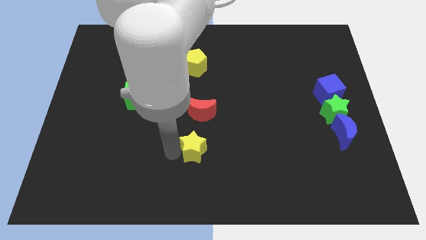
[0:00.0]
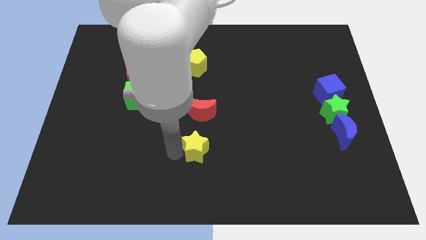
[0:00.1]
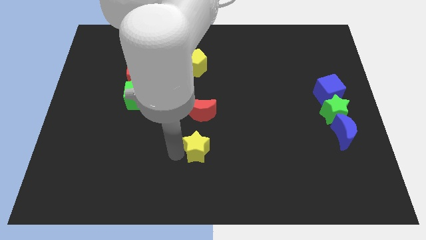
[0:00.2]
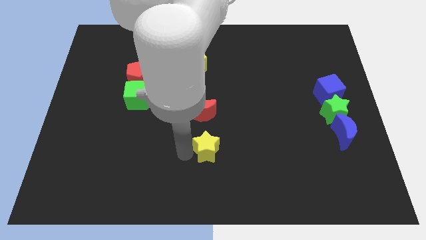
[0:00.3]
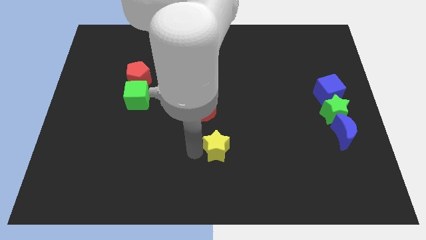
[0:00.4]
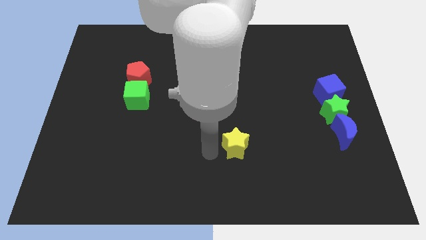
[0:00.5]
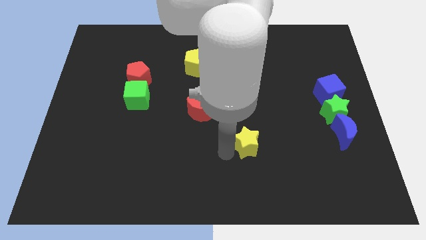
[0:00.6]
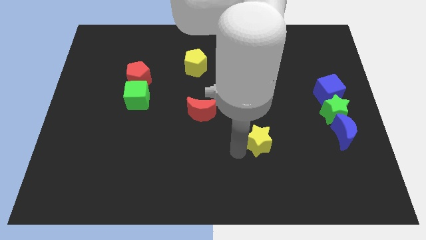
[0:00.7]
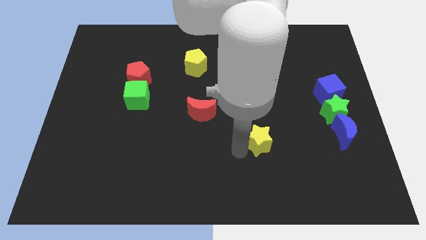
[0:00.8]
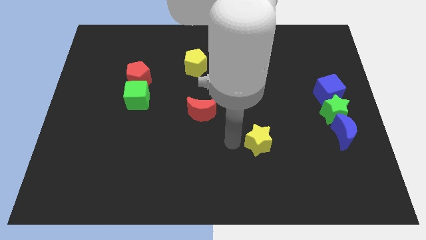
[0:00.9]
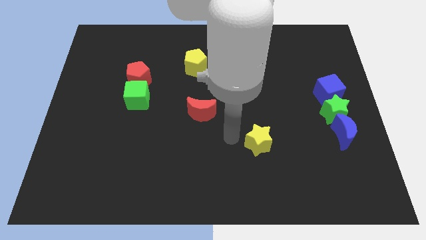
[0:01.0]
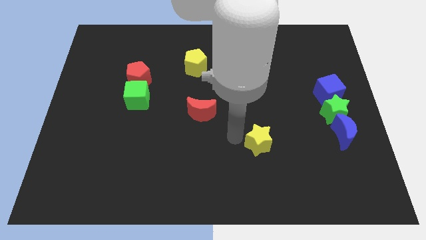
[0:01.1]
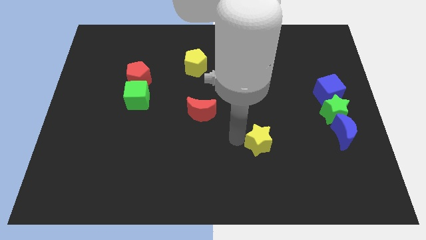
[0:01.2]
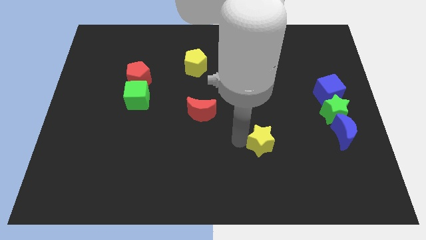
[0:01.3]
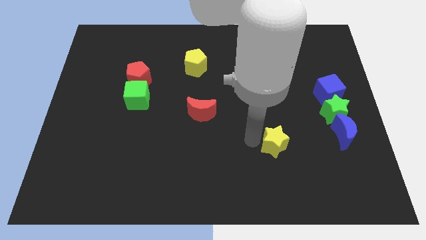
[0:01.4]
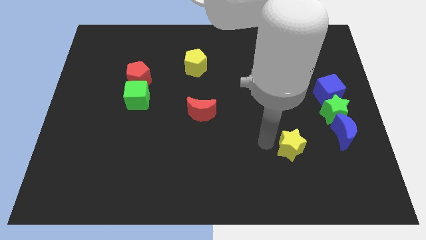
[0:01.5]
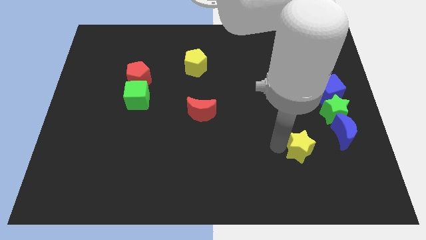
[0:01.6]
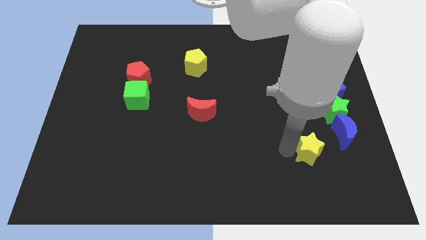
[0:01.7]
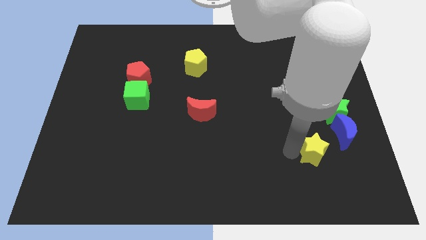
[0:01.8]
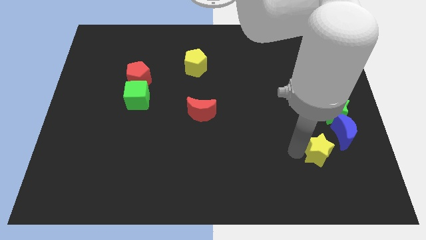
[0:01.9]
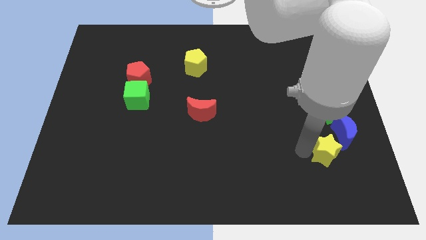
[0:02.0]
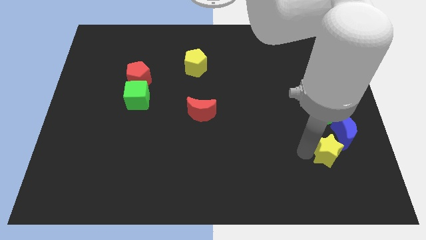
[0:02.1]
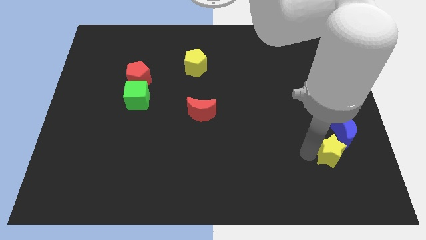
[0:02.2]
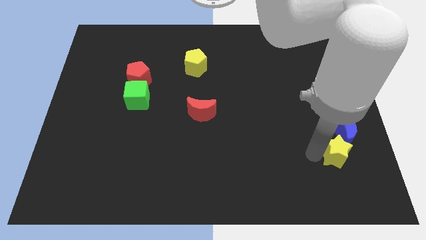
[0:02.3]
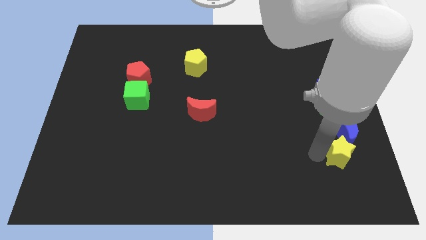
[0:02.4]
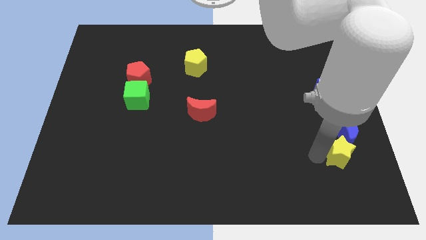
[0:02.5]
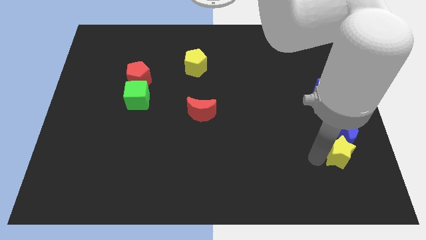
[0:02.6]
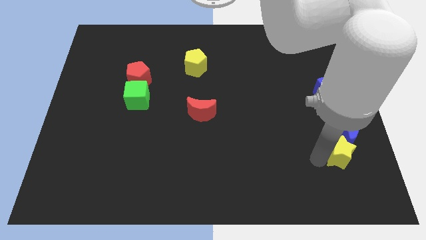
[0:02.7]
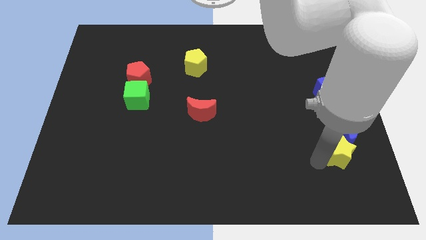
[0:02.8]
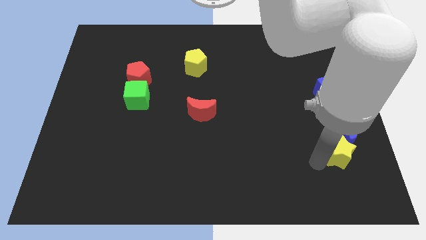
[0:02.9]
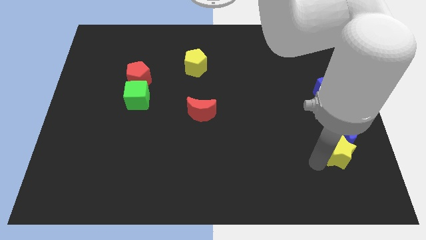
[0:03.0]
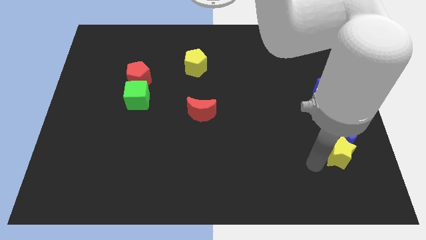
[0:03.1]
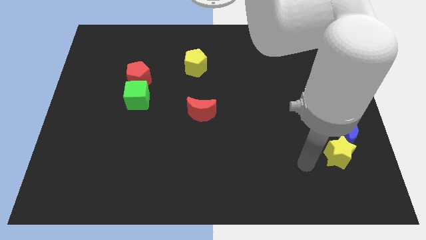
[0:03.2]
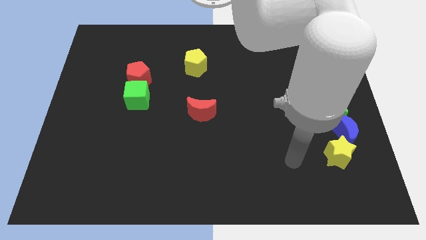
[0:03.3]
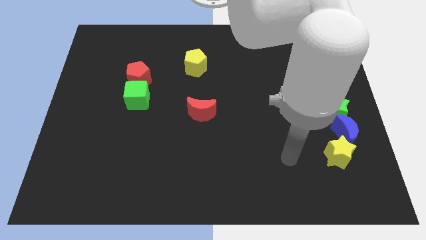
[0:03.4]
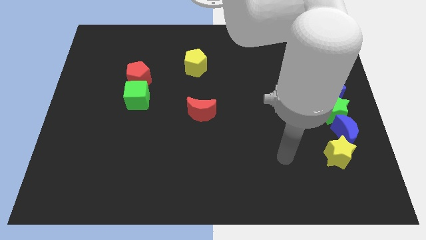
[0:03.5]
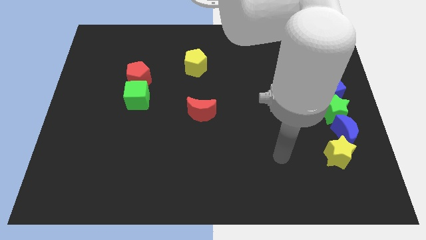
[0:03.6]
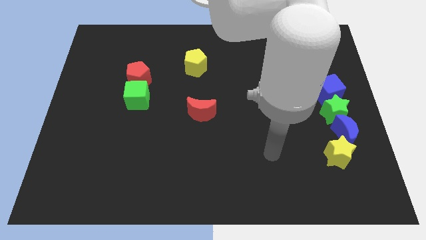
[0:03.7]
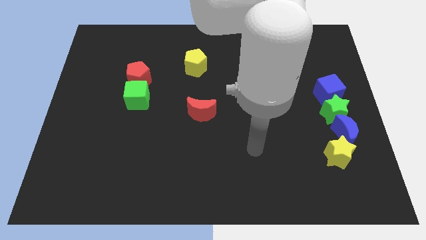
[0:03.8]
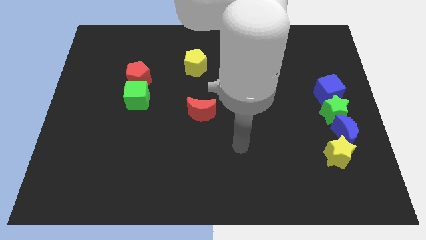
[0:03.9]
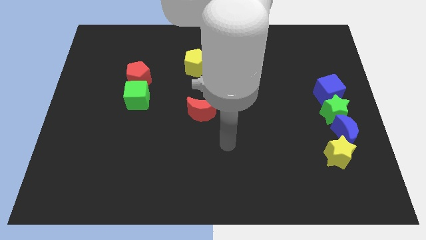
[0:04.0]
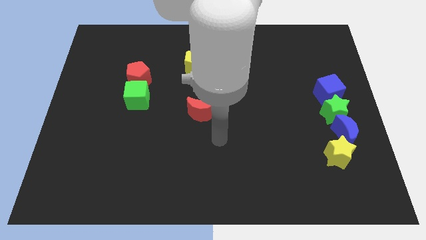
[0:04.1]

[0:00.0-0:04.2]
place the yellow star below the blue crescent

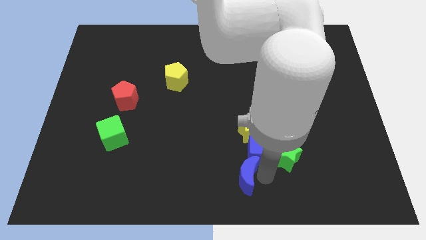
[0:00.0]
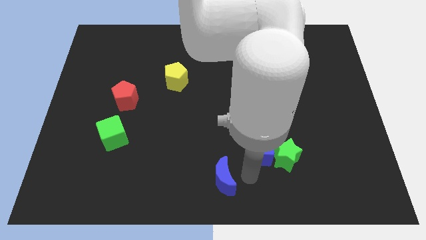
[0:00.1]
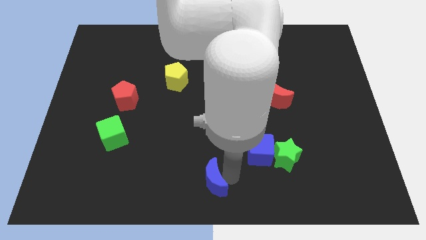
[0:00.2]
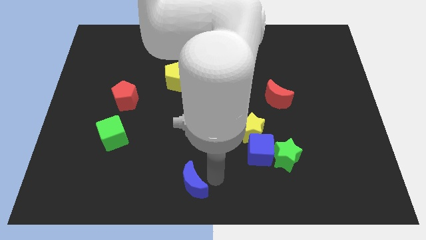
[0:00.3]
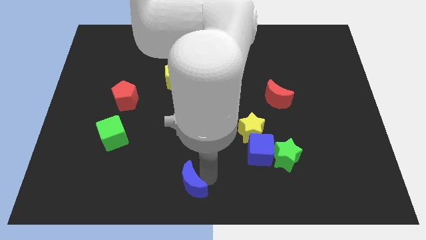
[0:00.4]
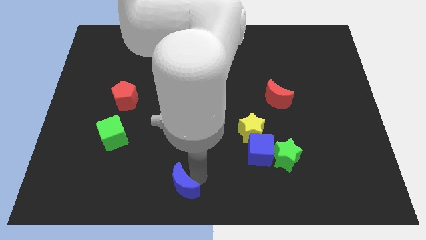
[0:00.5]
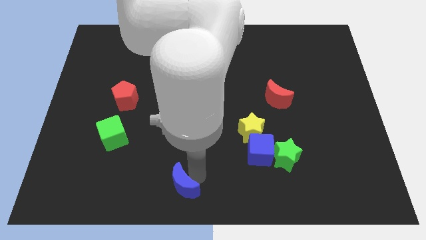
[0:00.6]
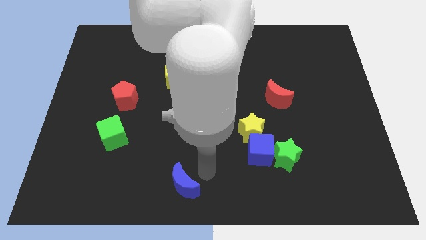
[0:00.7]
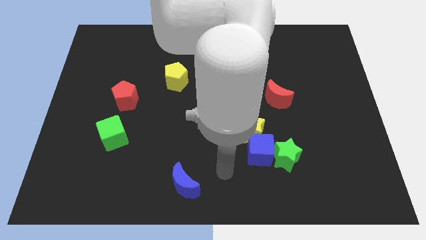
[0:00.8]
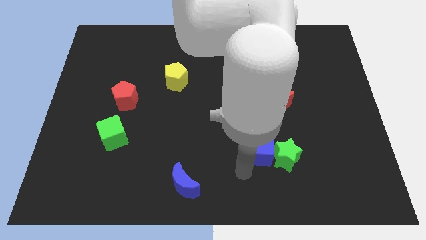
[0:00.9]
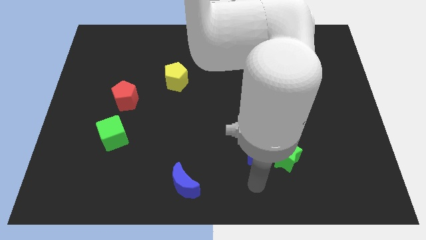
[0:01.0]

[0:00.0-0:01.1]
separate blue moon from blue cube

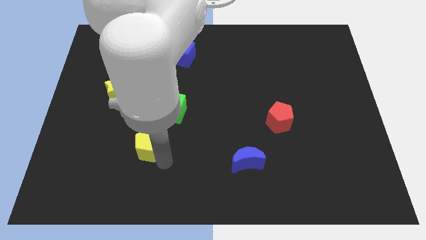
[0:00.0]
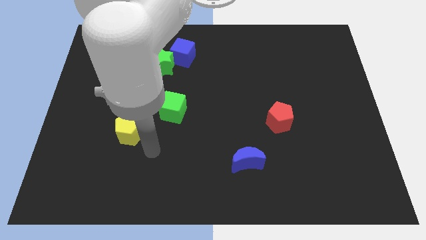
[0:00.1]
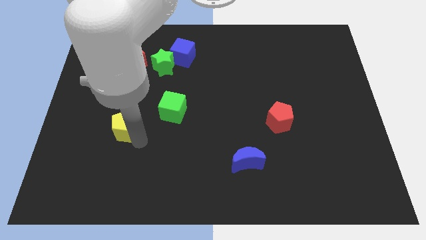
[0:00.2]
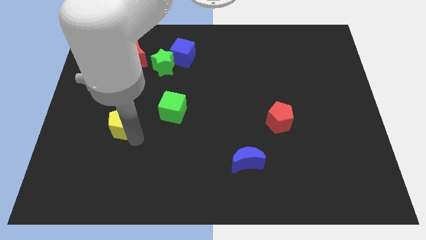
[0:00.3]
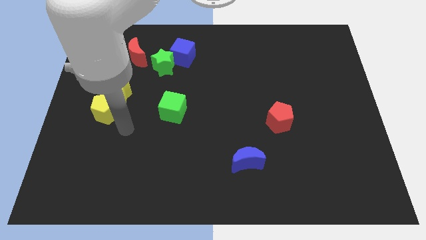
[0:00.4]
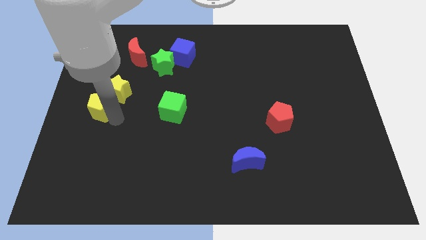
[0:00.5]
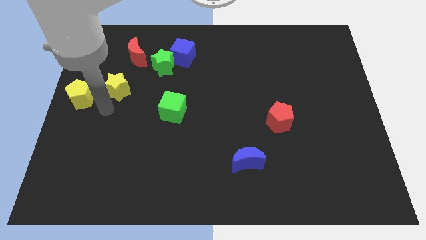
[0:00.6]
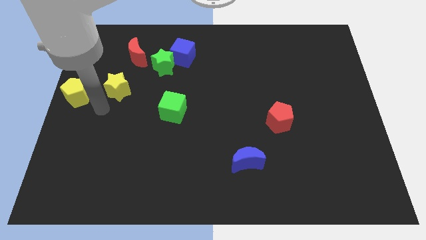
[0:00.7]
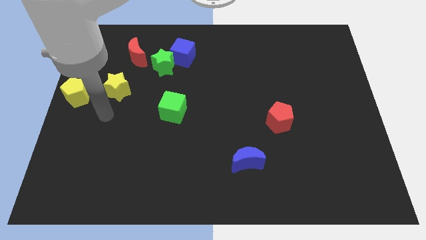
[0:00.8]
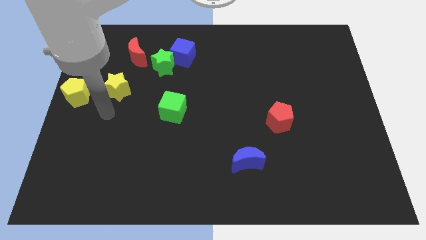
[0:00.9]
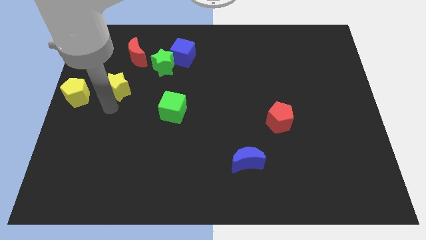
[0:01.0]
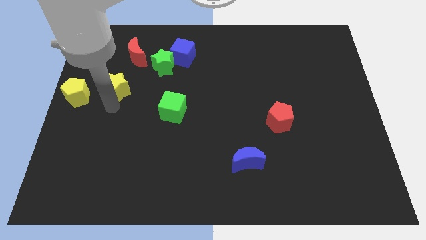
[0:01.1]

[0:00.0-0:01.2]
push yellow pentagon parallel to yellow star

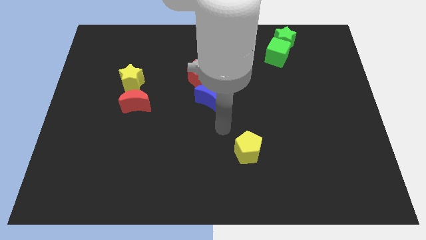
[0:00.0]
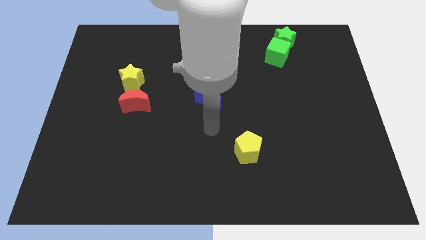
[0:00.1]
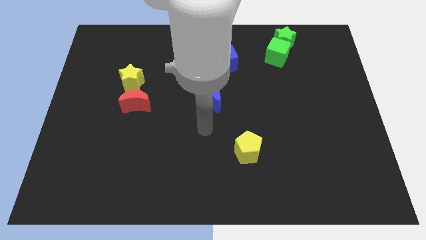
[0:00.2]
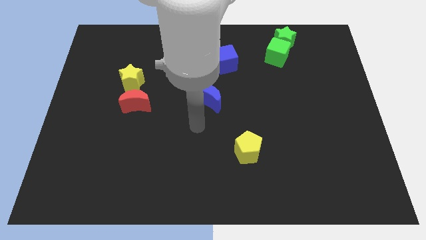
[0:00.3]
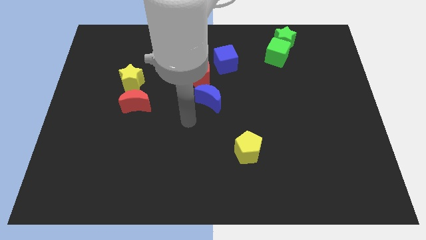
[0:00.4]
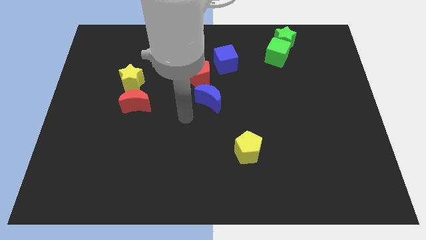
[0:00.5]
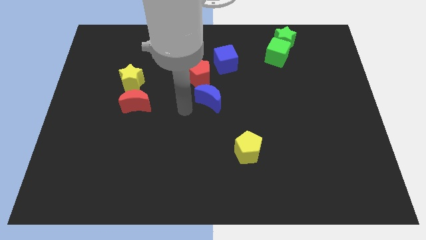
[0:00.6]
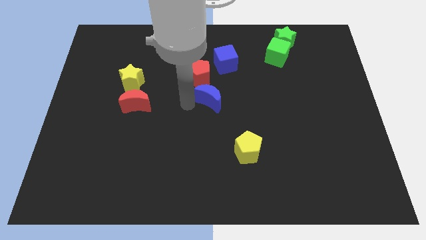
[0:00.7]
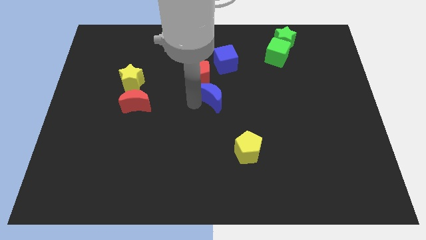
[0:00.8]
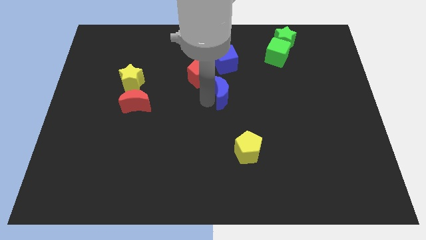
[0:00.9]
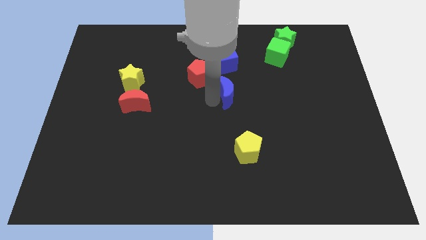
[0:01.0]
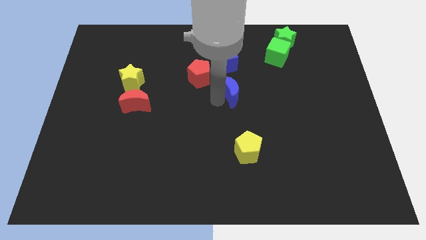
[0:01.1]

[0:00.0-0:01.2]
move the blue moon to the bottom of the blue cube

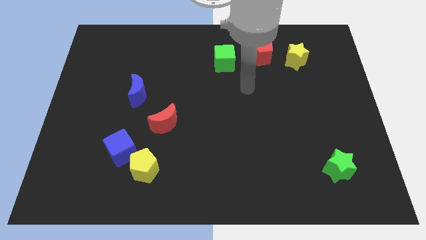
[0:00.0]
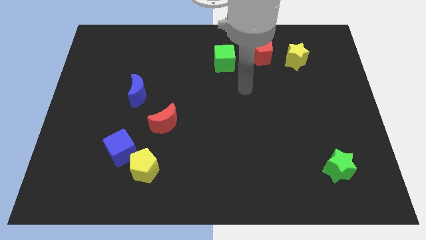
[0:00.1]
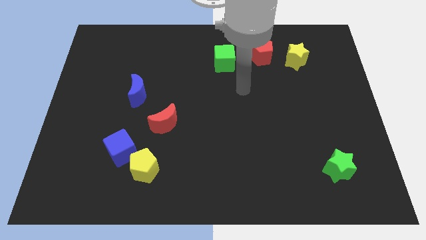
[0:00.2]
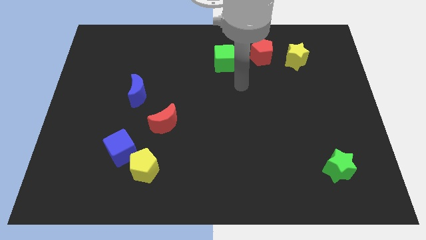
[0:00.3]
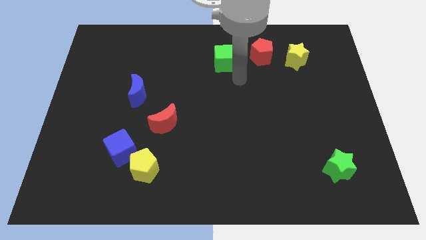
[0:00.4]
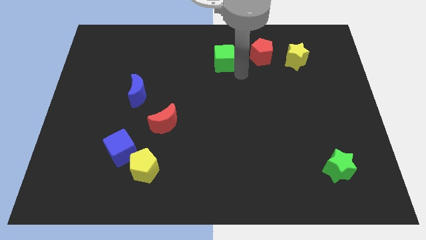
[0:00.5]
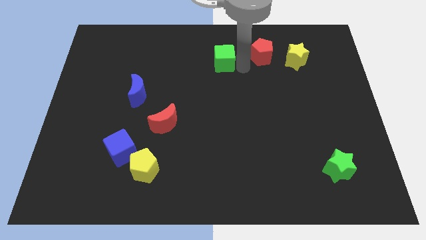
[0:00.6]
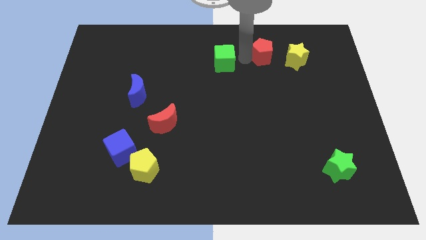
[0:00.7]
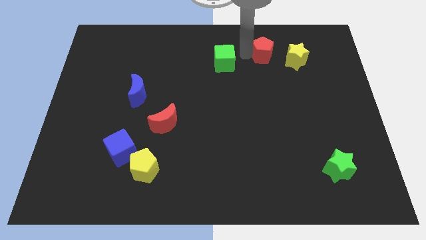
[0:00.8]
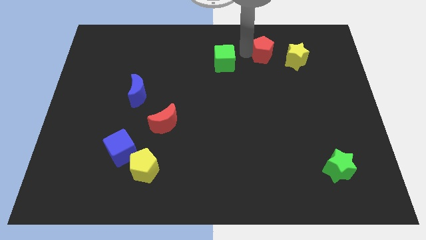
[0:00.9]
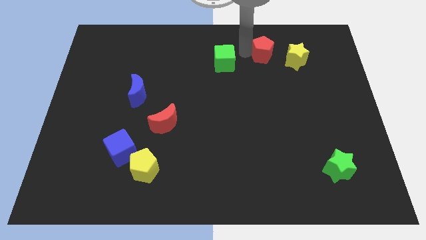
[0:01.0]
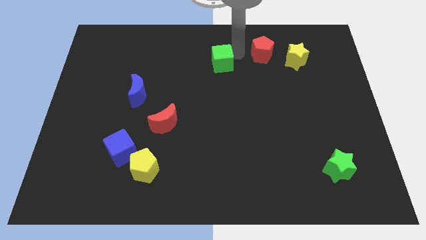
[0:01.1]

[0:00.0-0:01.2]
place the red pentagon close to the top right of the board
